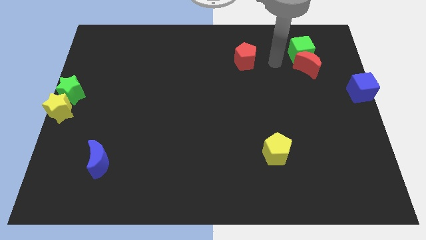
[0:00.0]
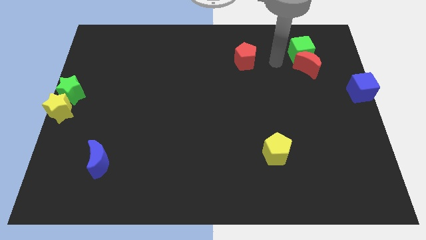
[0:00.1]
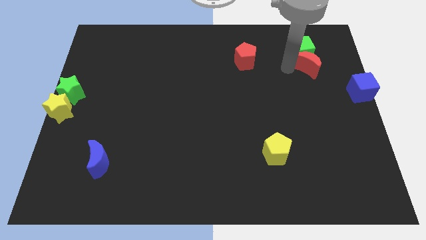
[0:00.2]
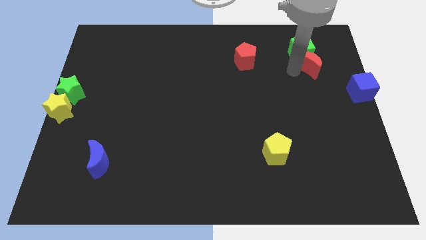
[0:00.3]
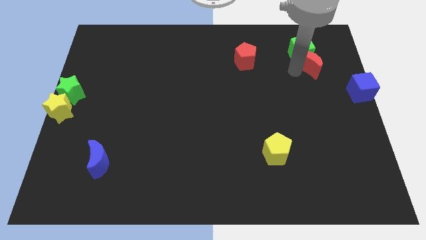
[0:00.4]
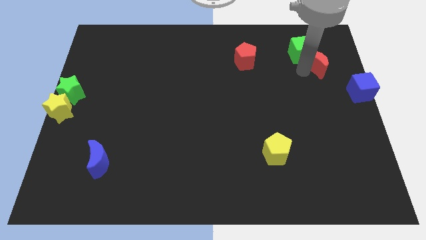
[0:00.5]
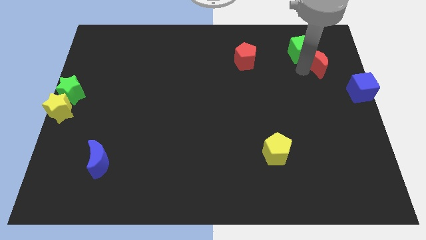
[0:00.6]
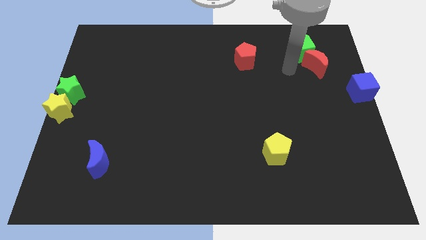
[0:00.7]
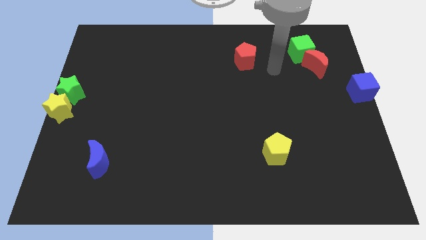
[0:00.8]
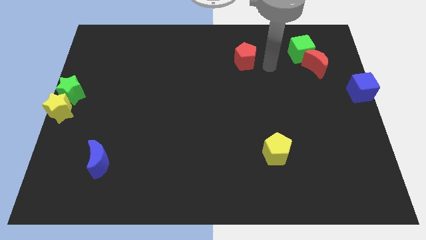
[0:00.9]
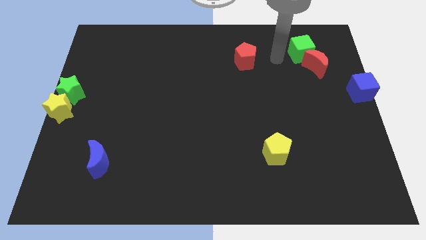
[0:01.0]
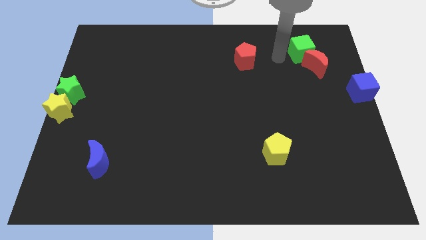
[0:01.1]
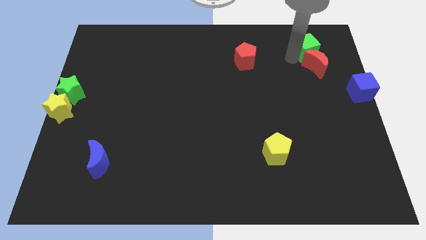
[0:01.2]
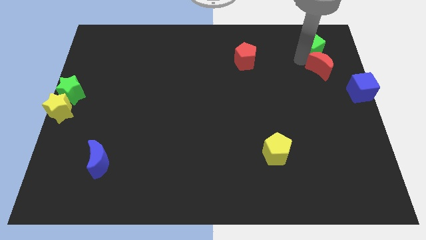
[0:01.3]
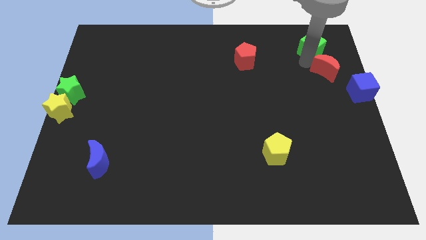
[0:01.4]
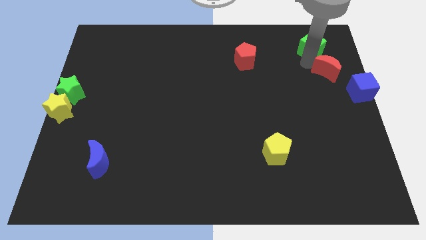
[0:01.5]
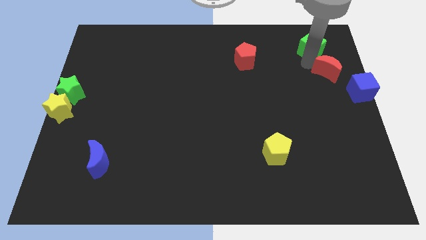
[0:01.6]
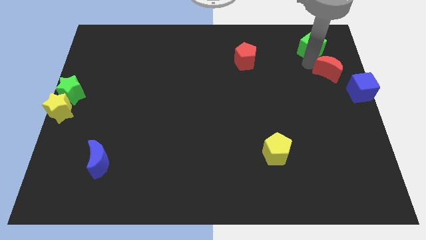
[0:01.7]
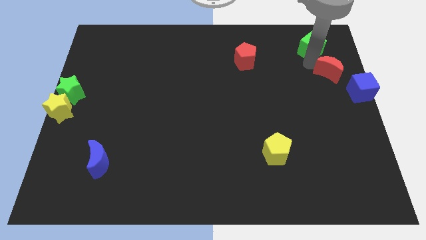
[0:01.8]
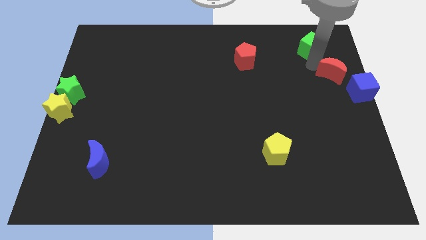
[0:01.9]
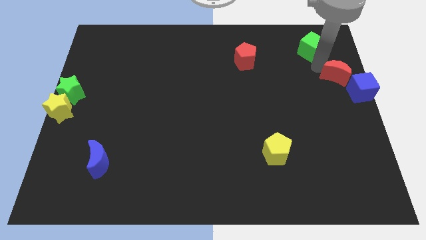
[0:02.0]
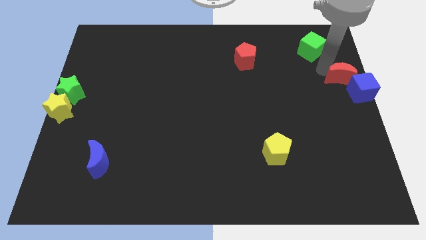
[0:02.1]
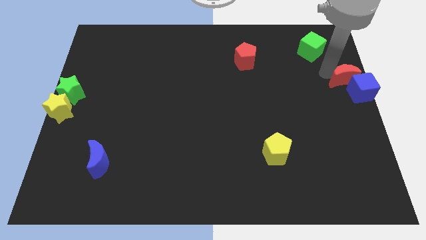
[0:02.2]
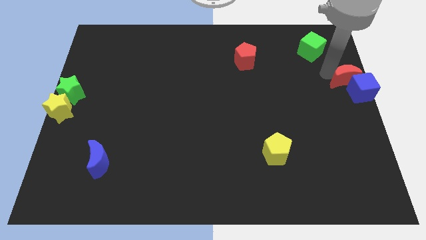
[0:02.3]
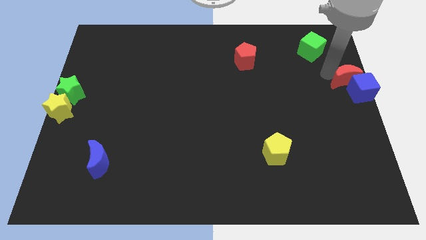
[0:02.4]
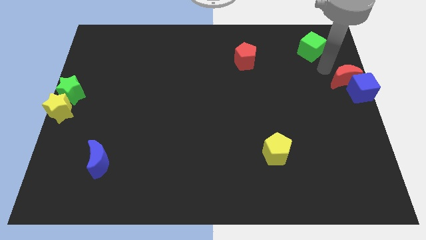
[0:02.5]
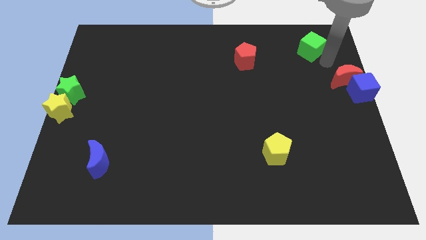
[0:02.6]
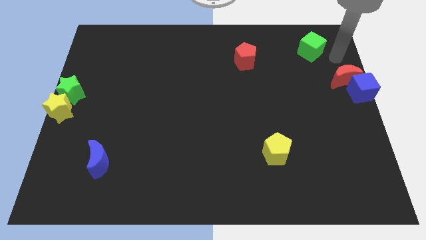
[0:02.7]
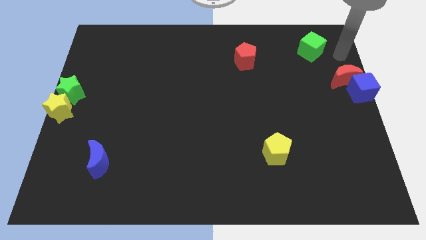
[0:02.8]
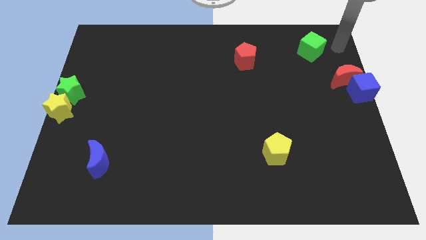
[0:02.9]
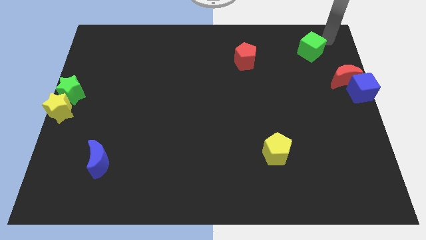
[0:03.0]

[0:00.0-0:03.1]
move red moon above the blue cube

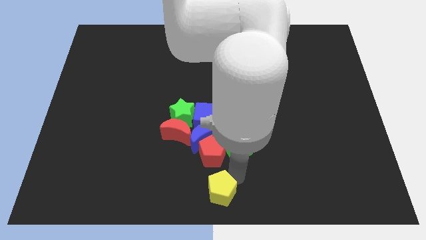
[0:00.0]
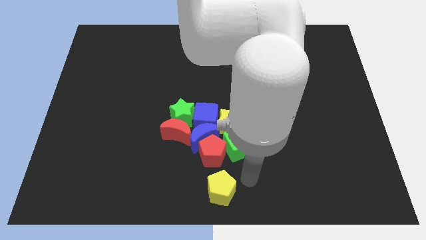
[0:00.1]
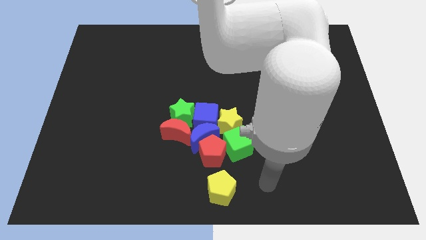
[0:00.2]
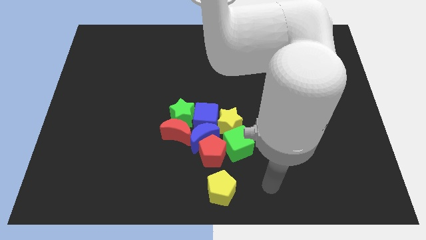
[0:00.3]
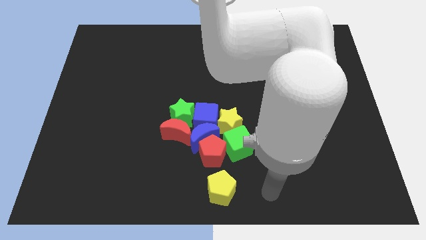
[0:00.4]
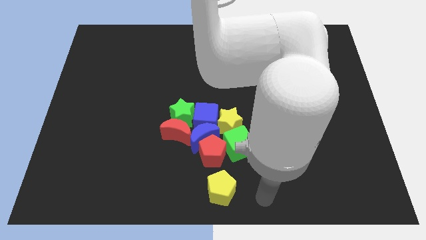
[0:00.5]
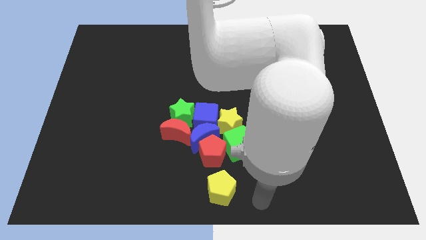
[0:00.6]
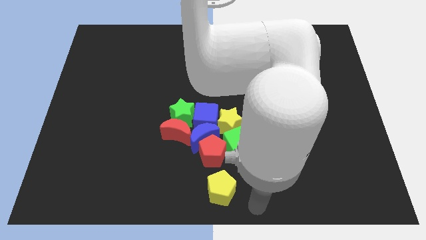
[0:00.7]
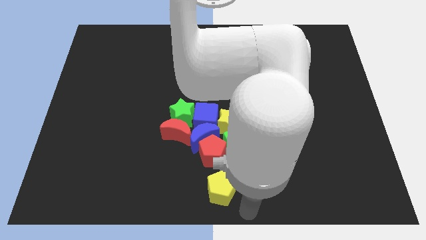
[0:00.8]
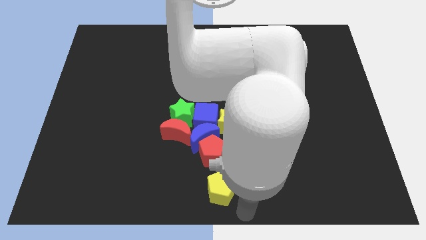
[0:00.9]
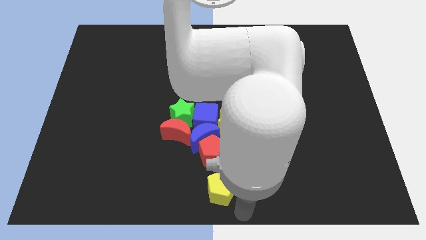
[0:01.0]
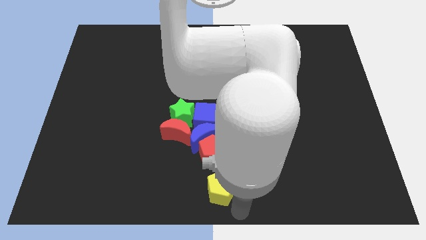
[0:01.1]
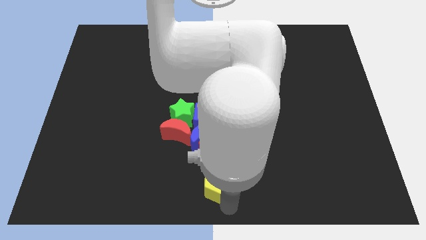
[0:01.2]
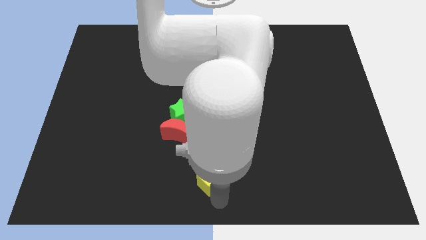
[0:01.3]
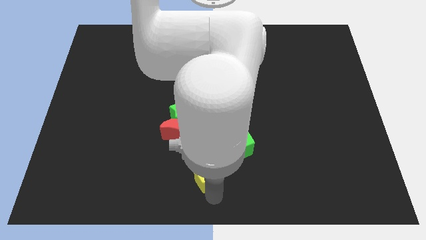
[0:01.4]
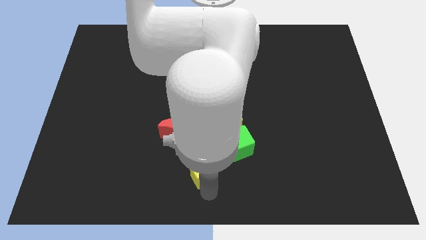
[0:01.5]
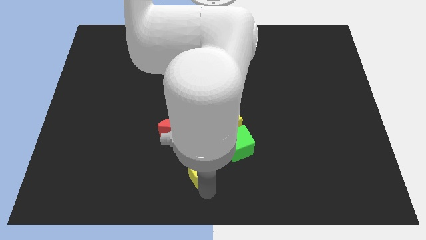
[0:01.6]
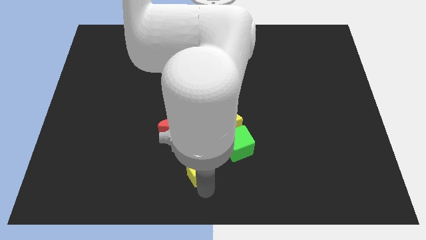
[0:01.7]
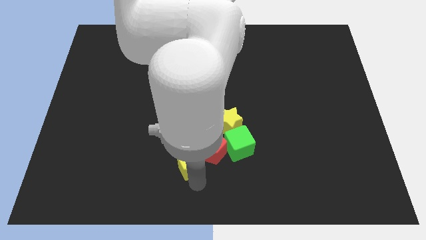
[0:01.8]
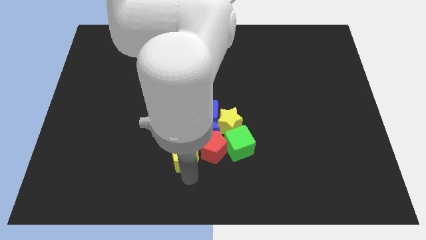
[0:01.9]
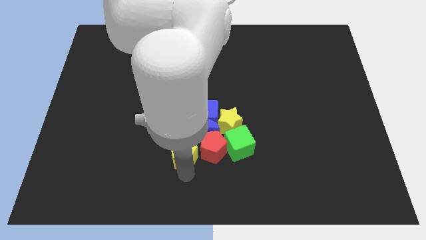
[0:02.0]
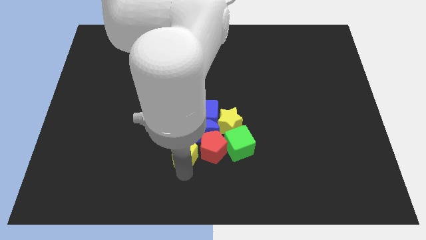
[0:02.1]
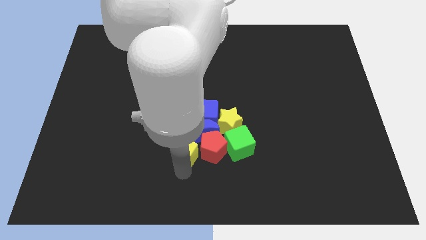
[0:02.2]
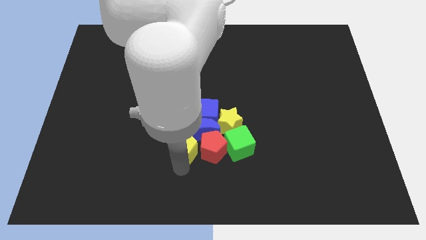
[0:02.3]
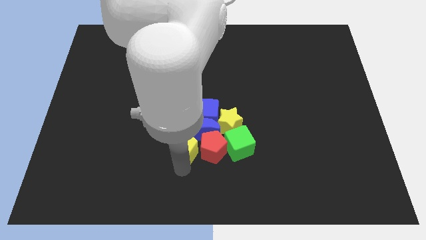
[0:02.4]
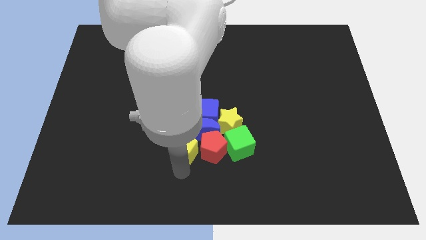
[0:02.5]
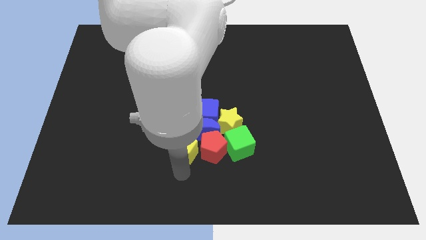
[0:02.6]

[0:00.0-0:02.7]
push the yellow pentagon into the red crescent

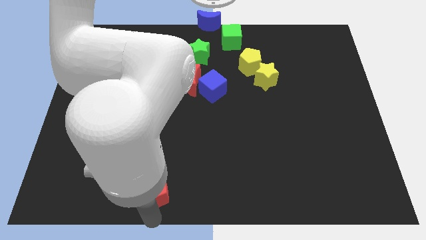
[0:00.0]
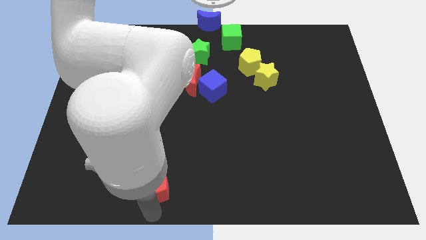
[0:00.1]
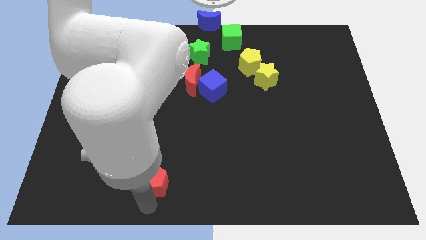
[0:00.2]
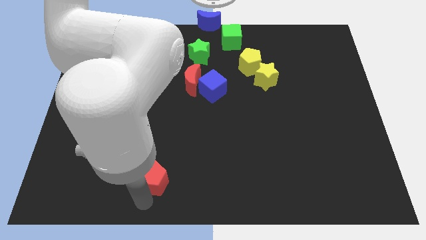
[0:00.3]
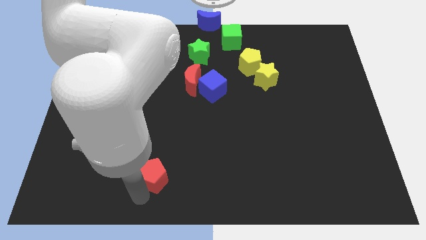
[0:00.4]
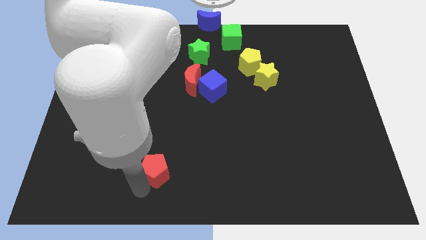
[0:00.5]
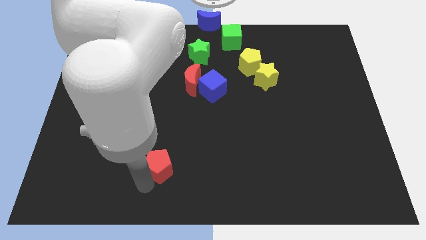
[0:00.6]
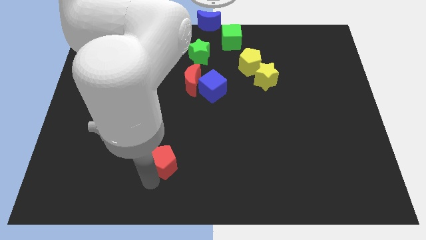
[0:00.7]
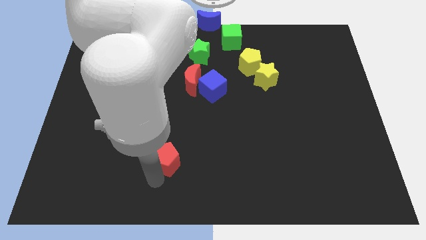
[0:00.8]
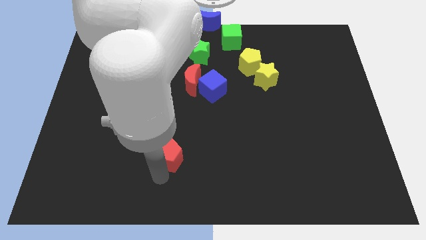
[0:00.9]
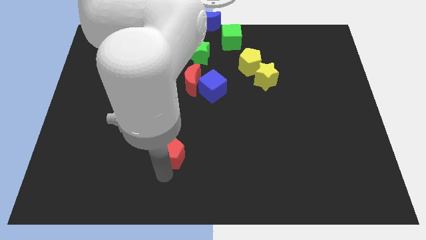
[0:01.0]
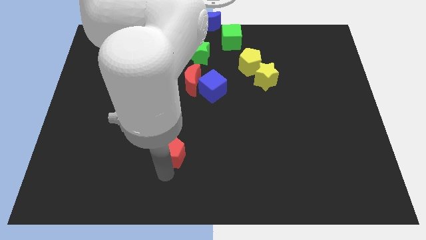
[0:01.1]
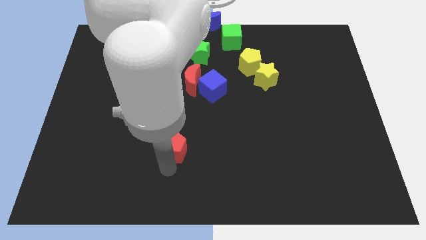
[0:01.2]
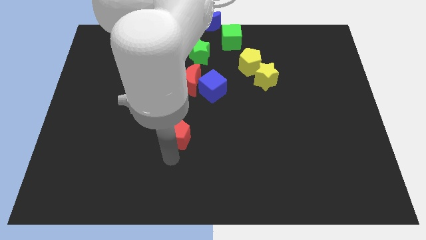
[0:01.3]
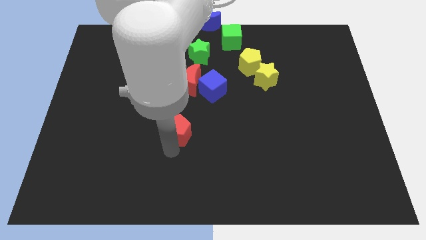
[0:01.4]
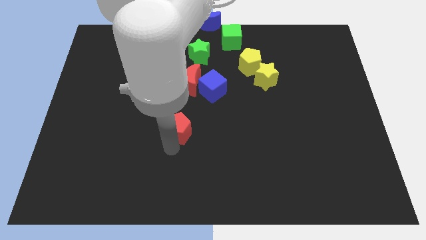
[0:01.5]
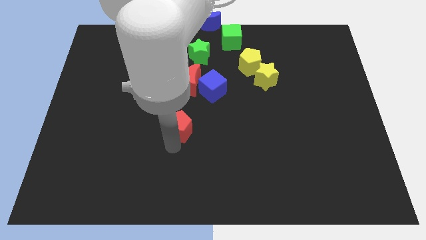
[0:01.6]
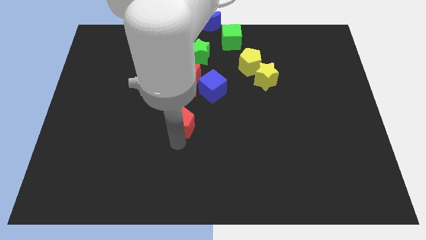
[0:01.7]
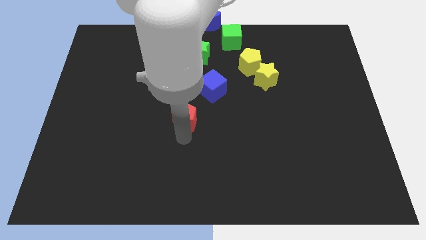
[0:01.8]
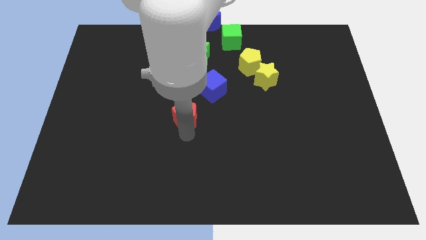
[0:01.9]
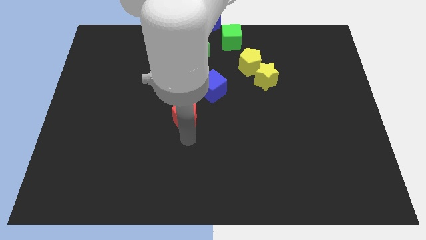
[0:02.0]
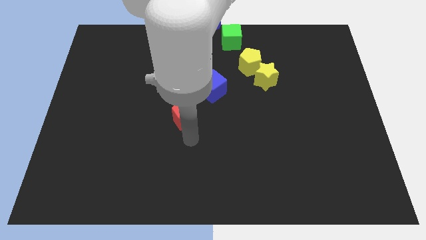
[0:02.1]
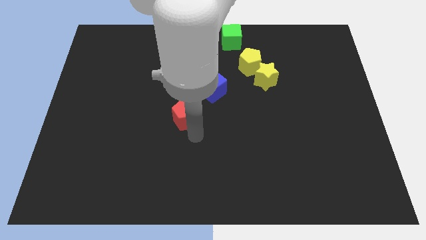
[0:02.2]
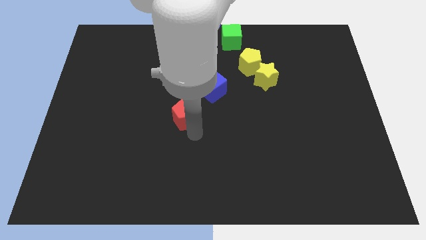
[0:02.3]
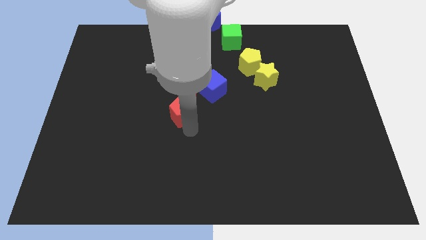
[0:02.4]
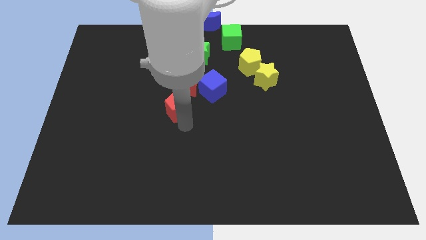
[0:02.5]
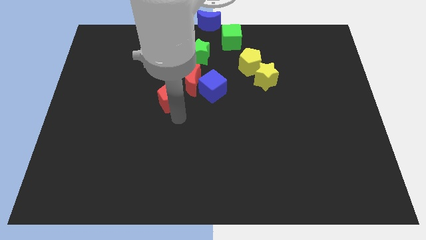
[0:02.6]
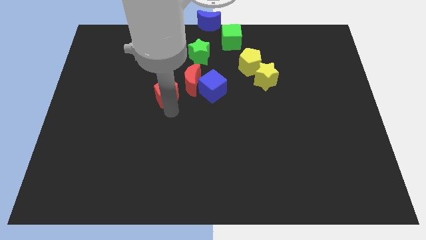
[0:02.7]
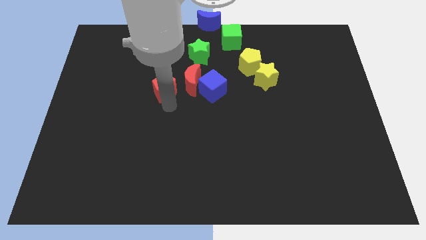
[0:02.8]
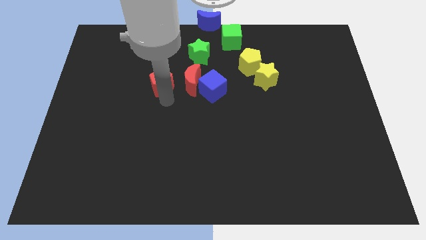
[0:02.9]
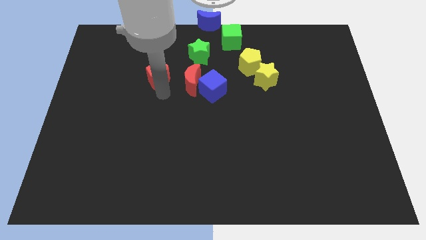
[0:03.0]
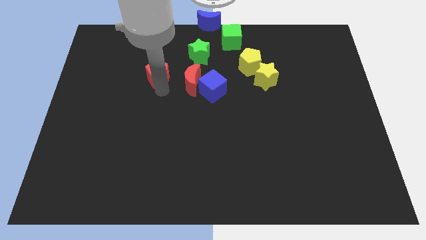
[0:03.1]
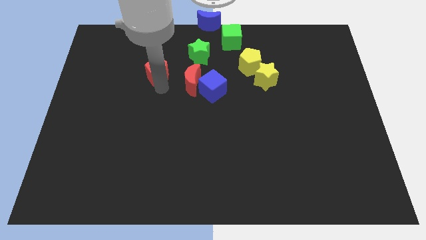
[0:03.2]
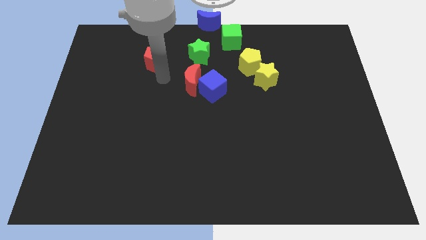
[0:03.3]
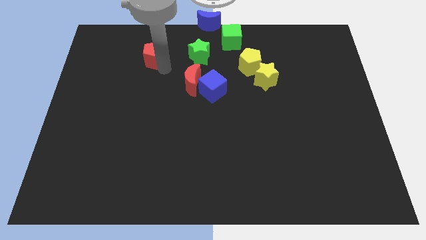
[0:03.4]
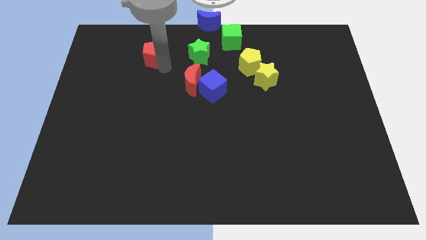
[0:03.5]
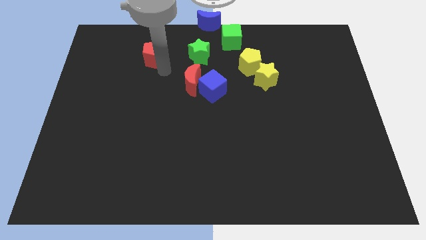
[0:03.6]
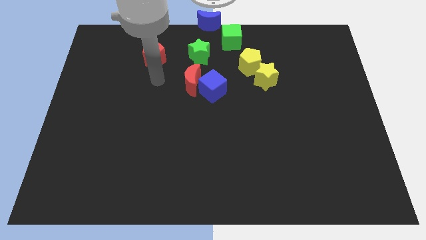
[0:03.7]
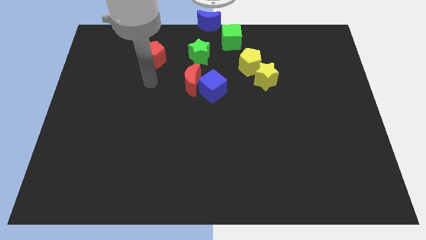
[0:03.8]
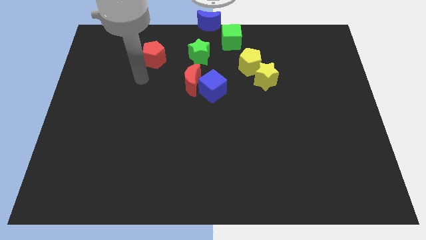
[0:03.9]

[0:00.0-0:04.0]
place the red pentagon to the left of the green star
